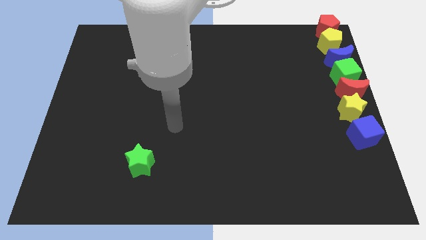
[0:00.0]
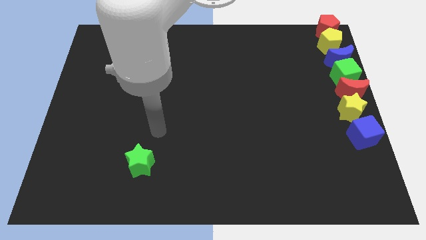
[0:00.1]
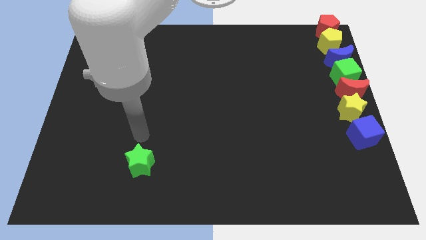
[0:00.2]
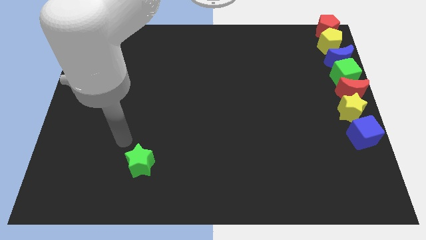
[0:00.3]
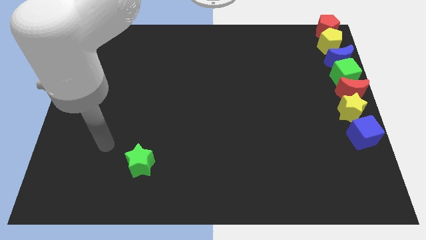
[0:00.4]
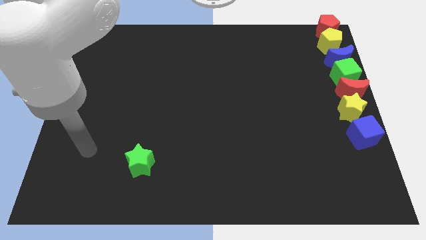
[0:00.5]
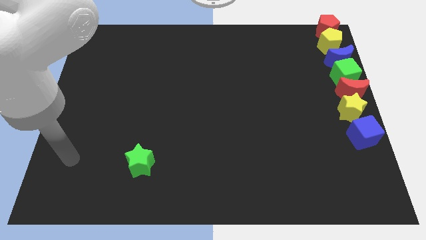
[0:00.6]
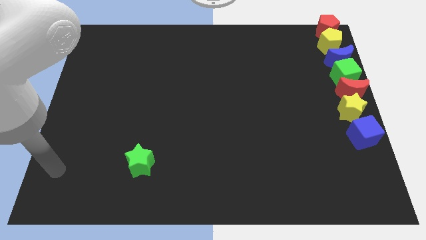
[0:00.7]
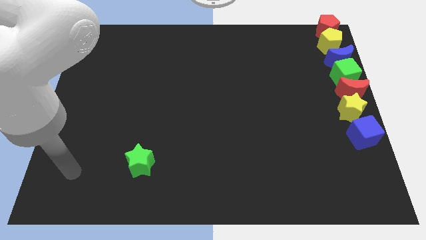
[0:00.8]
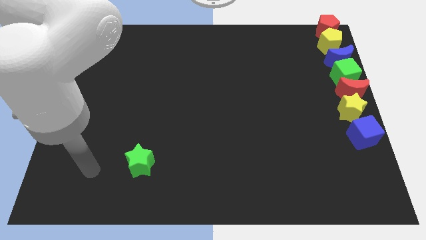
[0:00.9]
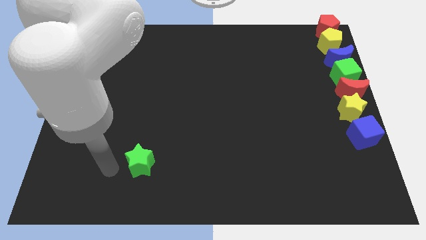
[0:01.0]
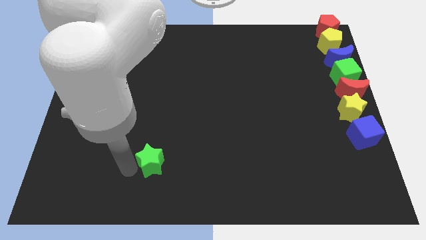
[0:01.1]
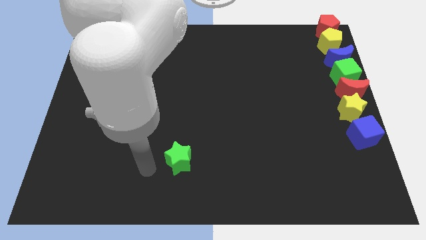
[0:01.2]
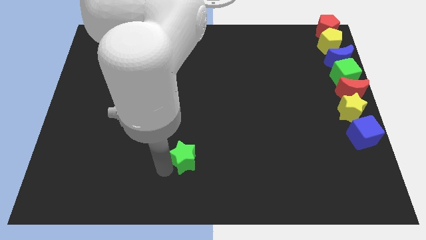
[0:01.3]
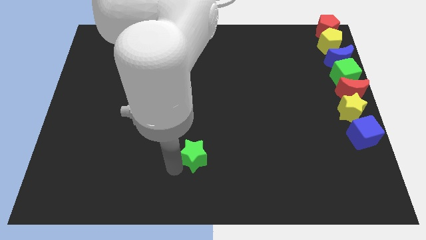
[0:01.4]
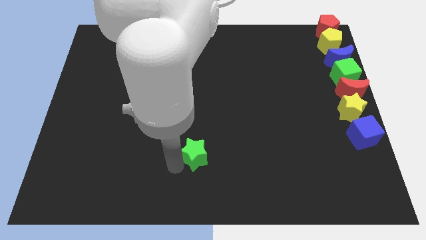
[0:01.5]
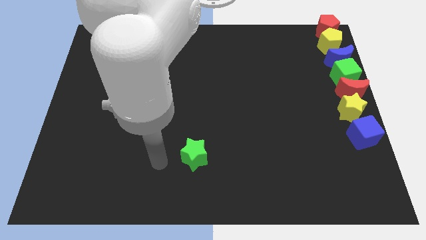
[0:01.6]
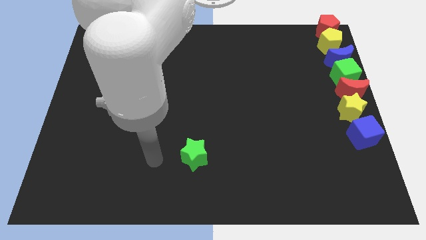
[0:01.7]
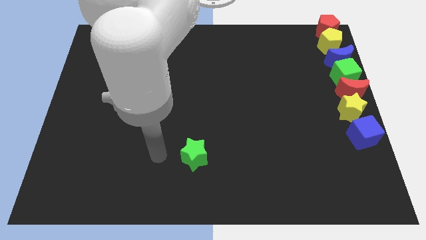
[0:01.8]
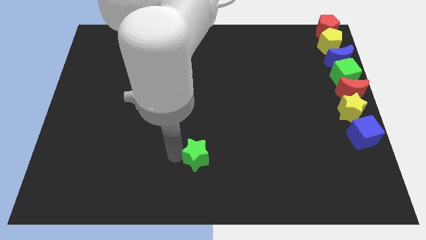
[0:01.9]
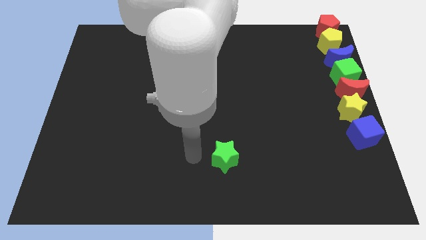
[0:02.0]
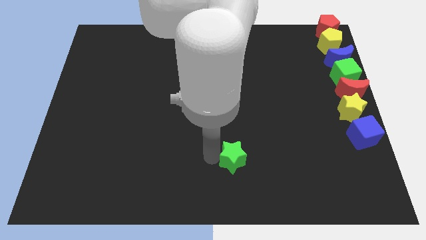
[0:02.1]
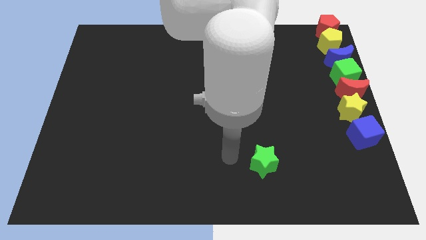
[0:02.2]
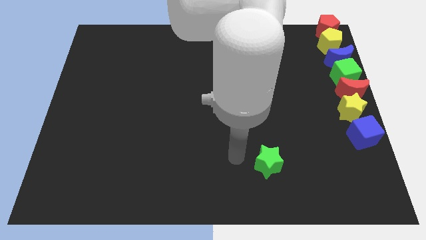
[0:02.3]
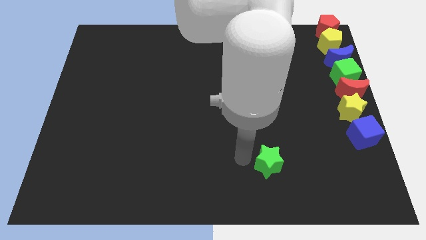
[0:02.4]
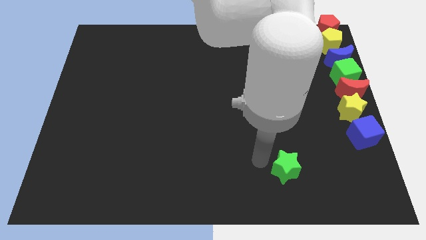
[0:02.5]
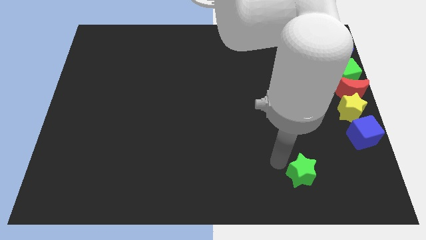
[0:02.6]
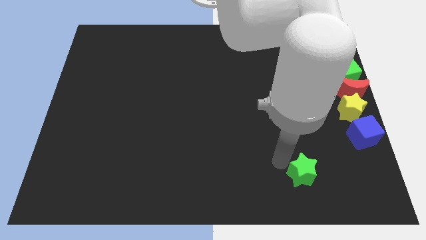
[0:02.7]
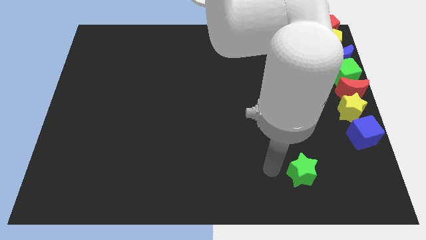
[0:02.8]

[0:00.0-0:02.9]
slide the green star to the right

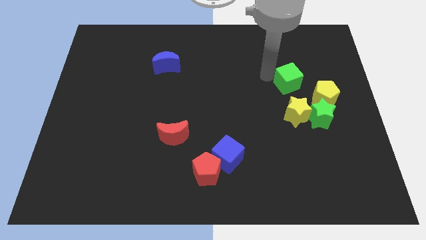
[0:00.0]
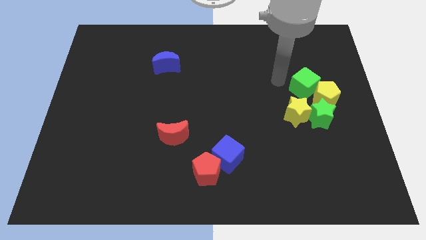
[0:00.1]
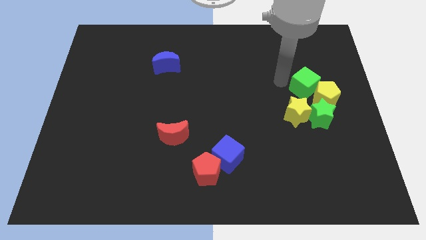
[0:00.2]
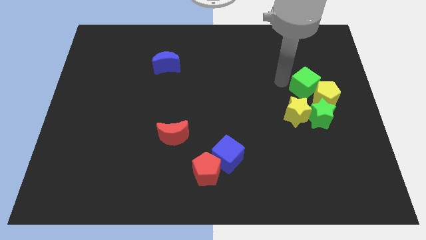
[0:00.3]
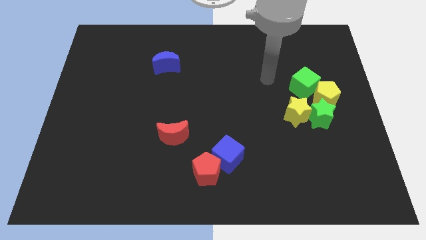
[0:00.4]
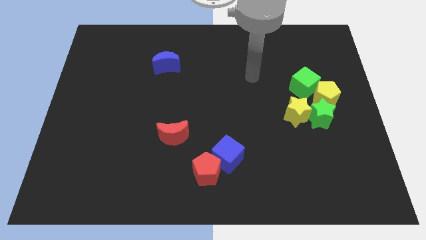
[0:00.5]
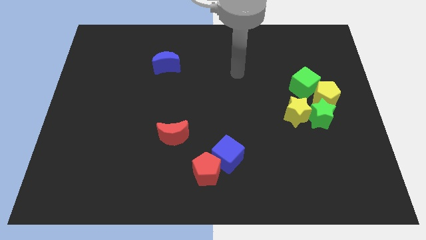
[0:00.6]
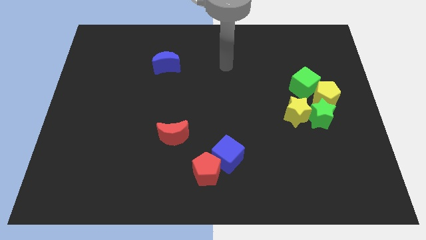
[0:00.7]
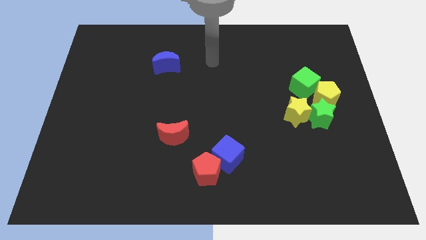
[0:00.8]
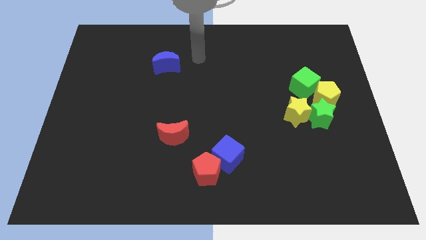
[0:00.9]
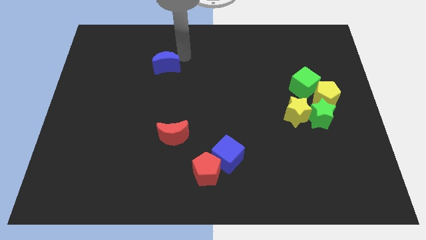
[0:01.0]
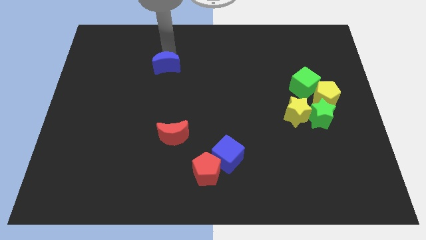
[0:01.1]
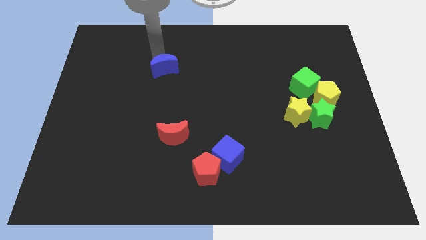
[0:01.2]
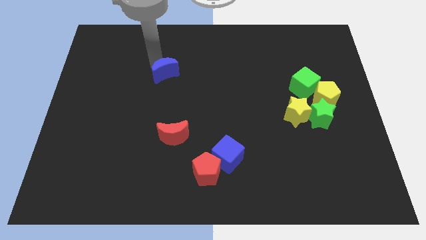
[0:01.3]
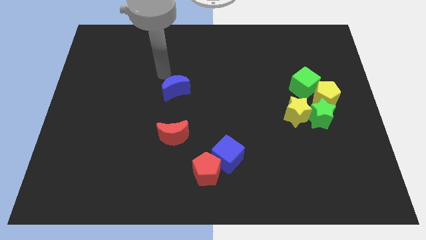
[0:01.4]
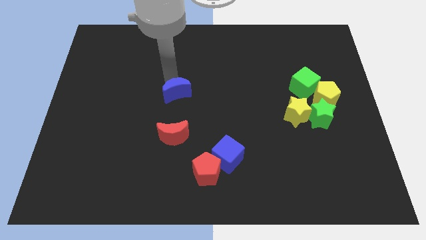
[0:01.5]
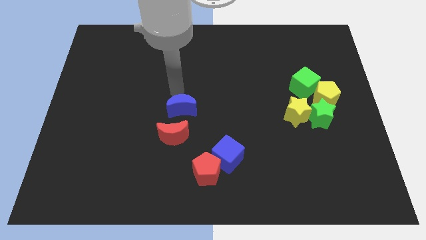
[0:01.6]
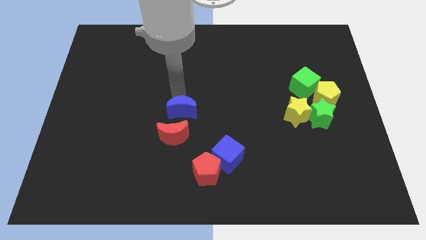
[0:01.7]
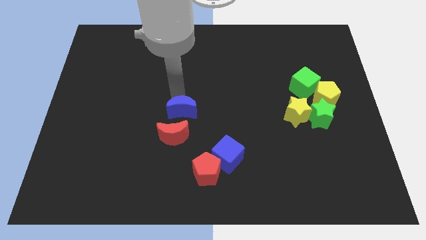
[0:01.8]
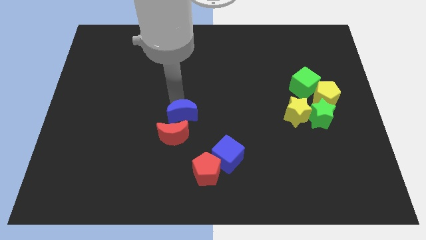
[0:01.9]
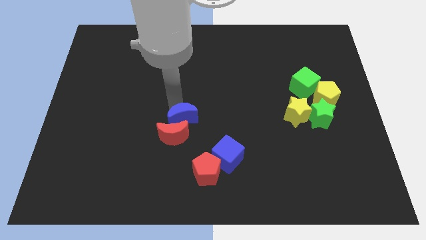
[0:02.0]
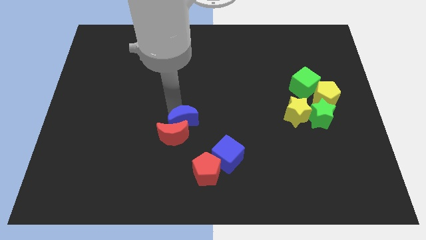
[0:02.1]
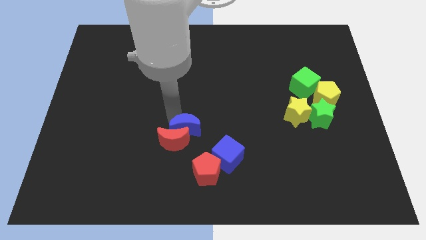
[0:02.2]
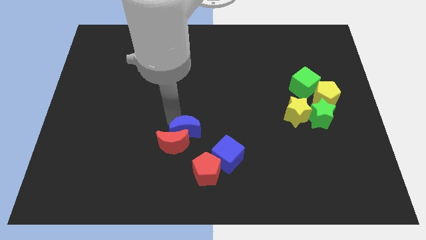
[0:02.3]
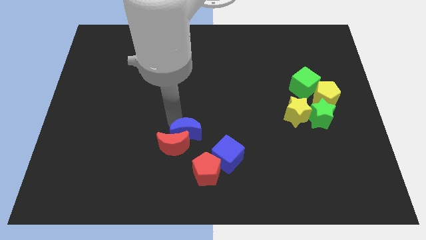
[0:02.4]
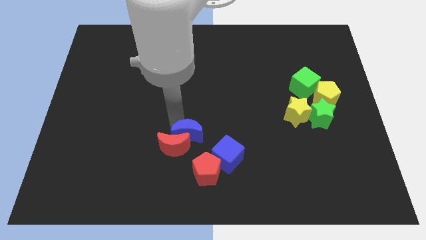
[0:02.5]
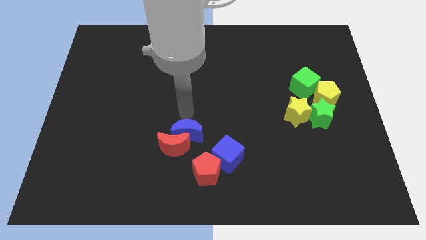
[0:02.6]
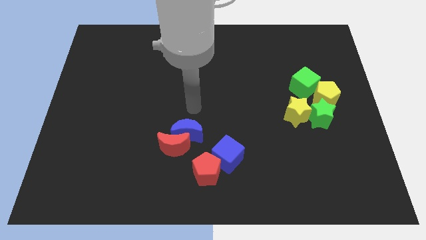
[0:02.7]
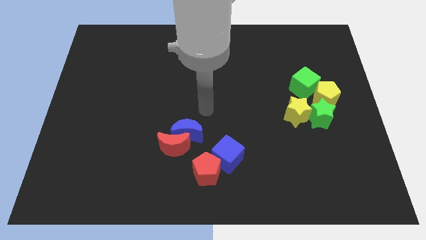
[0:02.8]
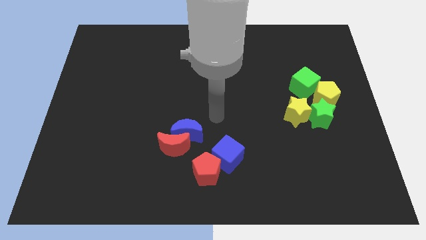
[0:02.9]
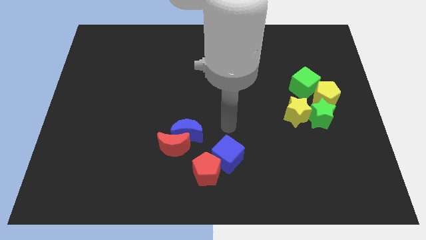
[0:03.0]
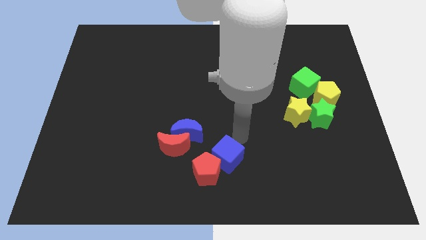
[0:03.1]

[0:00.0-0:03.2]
pull the blue crescent into red crescent

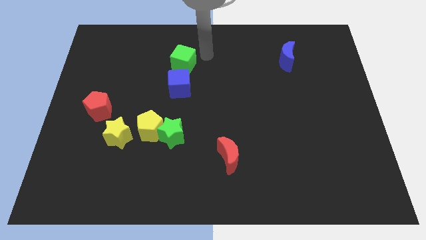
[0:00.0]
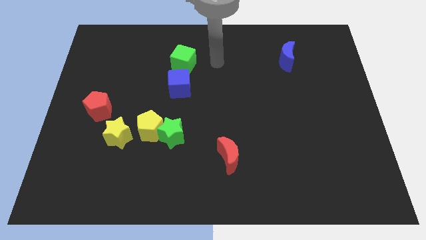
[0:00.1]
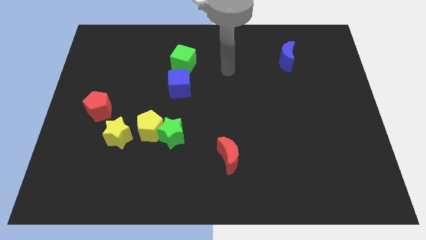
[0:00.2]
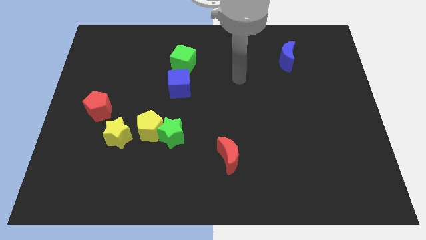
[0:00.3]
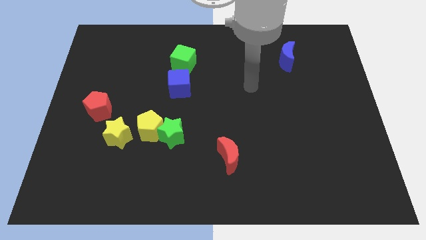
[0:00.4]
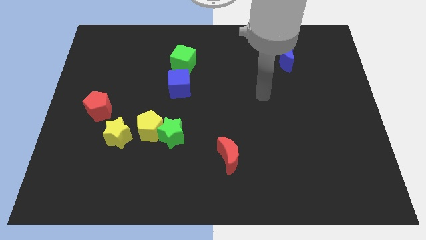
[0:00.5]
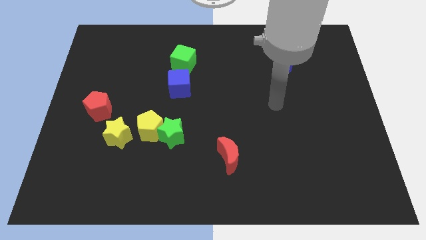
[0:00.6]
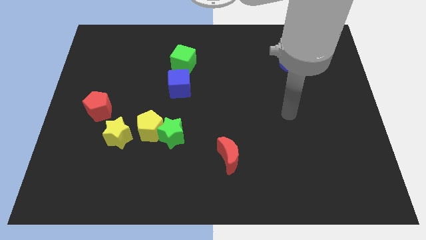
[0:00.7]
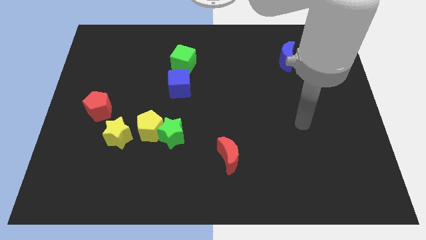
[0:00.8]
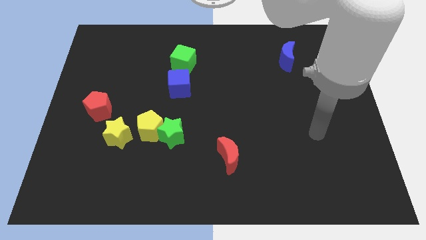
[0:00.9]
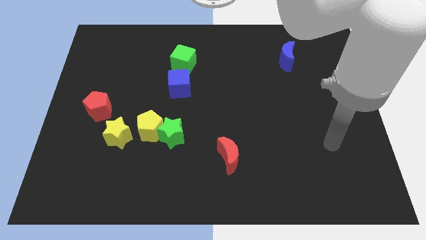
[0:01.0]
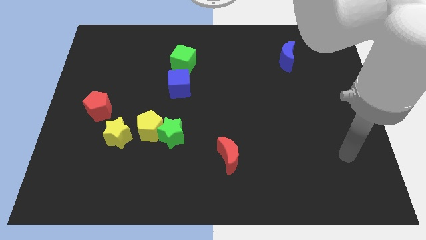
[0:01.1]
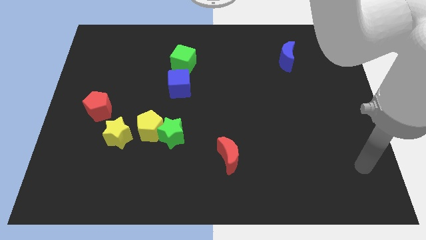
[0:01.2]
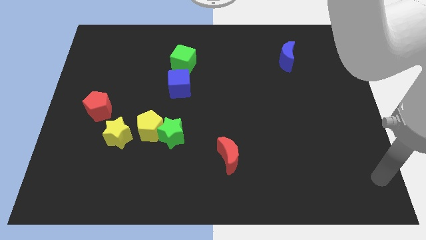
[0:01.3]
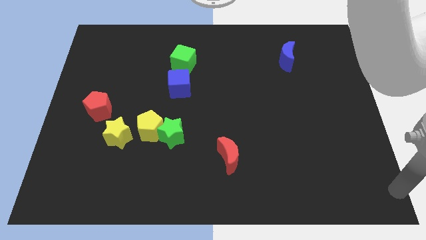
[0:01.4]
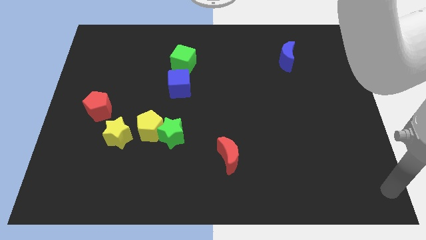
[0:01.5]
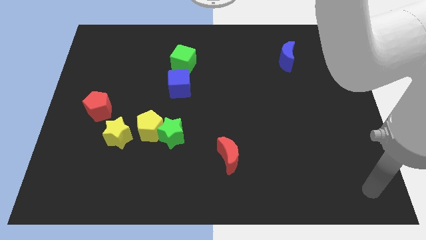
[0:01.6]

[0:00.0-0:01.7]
move your hand to the bottom right

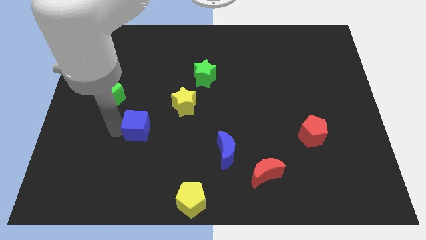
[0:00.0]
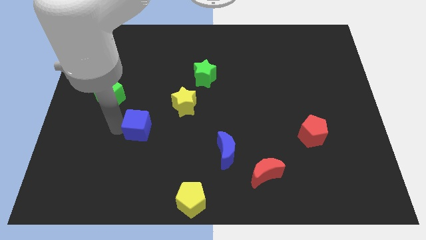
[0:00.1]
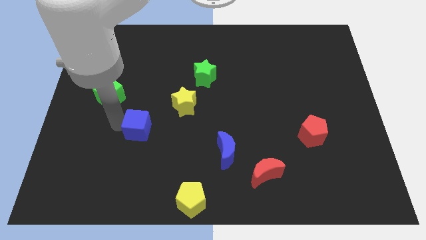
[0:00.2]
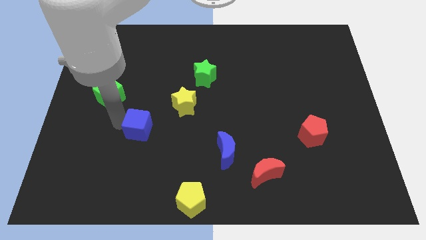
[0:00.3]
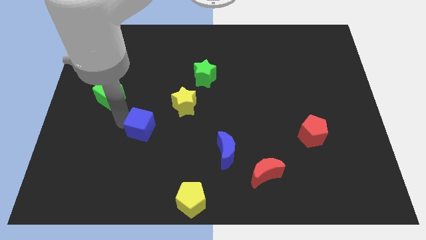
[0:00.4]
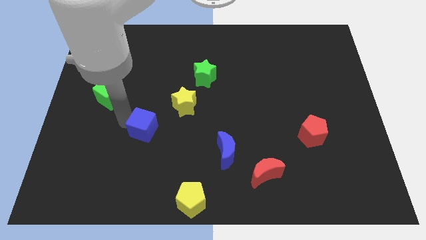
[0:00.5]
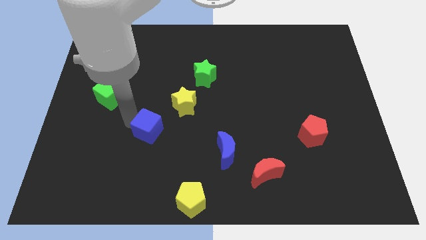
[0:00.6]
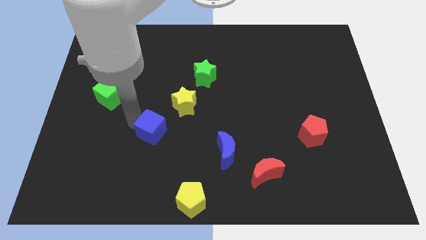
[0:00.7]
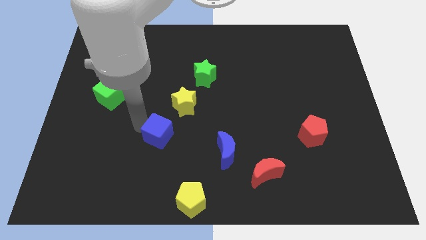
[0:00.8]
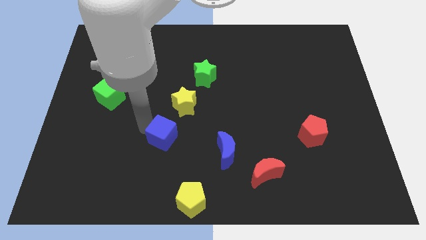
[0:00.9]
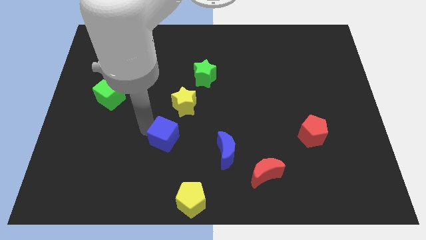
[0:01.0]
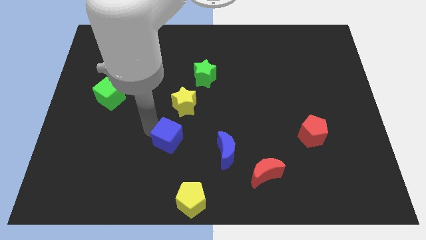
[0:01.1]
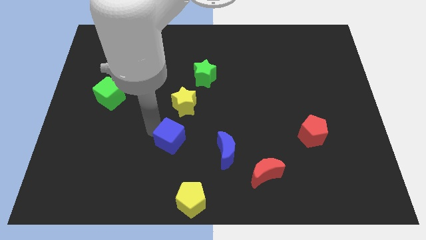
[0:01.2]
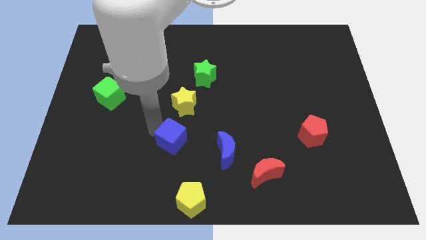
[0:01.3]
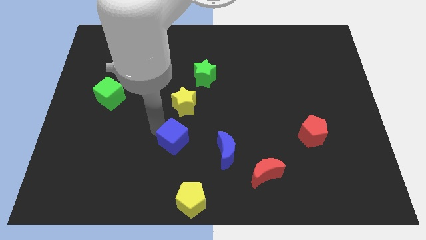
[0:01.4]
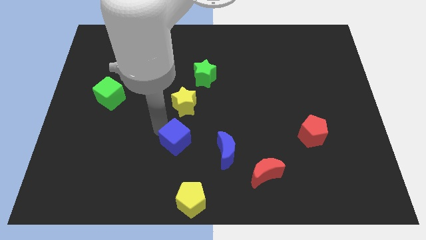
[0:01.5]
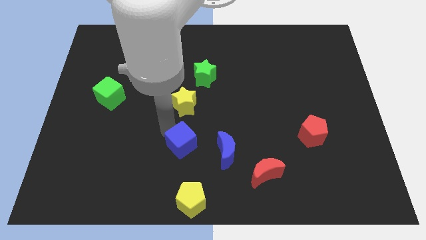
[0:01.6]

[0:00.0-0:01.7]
put the blue cube to the bottom side of the yellow star
